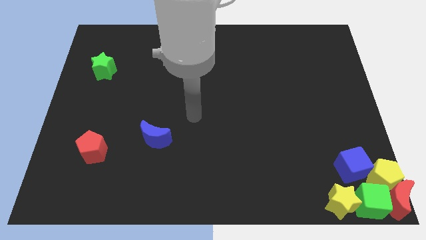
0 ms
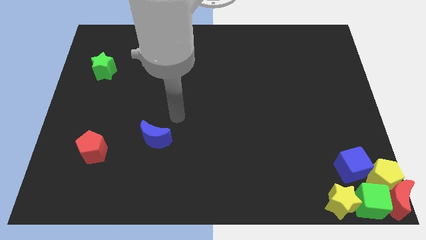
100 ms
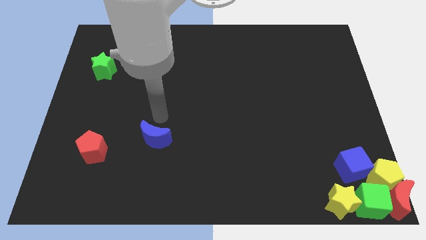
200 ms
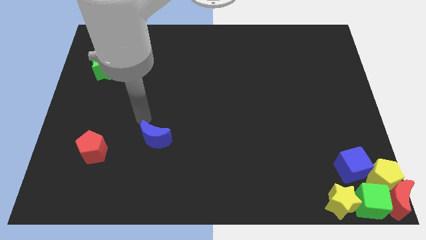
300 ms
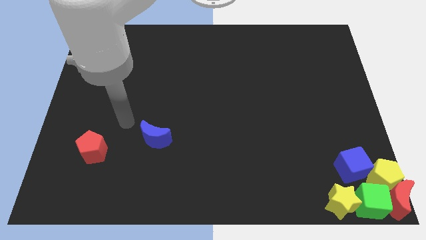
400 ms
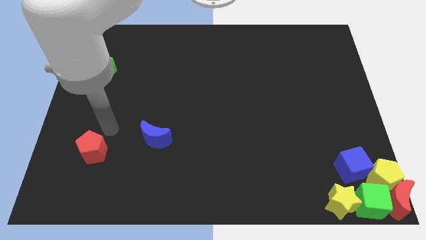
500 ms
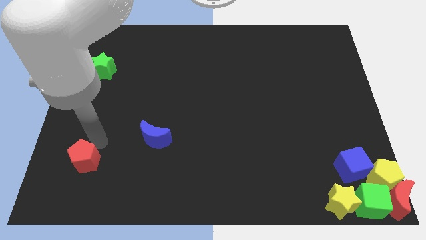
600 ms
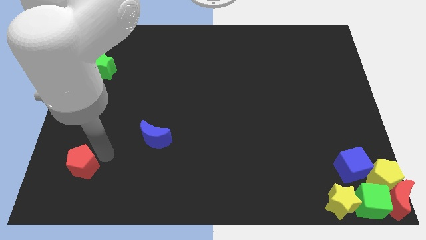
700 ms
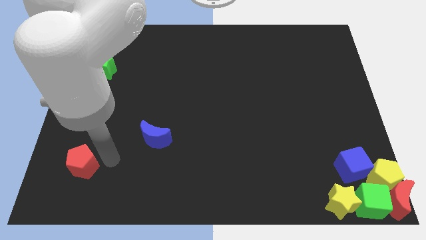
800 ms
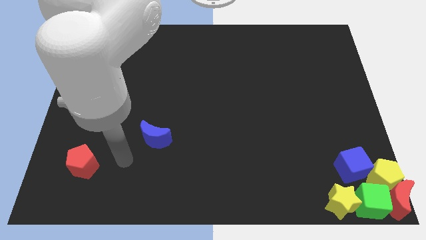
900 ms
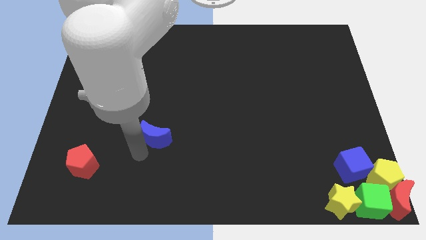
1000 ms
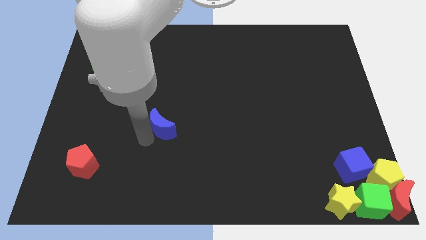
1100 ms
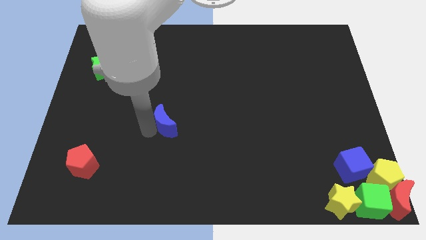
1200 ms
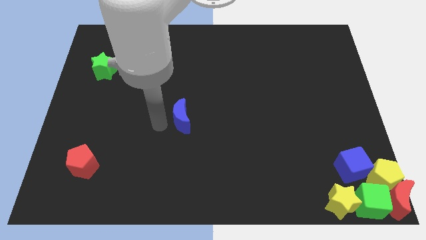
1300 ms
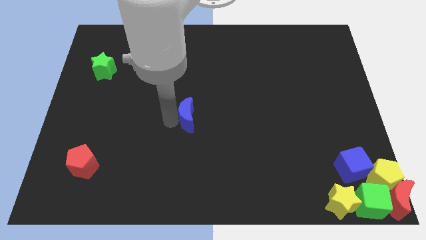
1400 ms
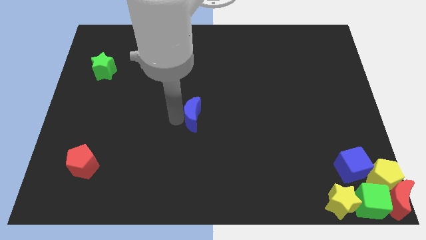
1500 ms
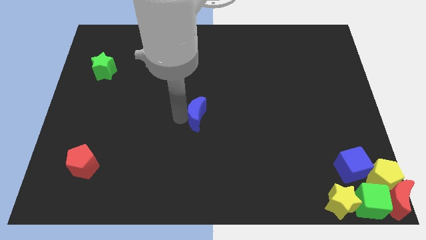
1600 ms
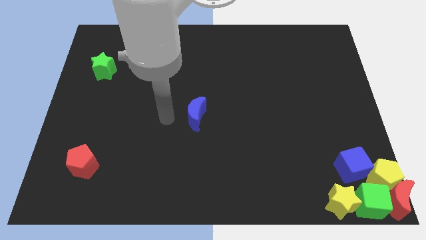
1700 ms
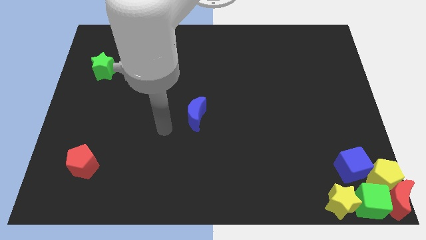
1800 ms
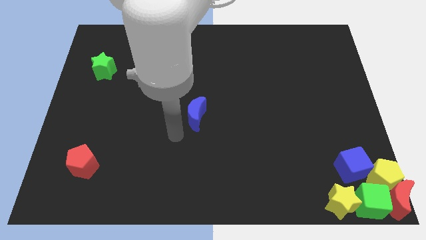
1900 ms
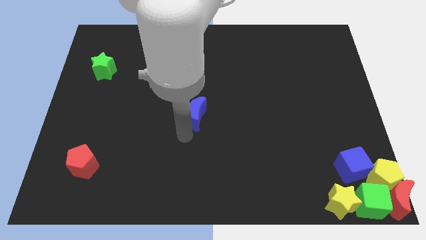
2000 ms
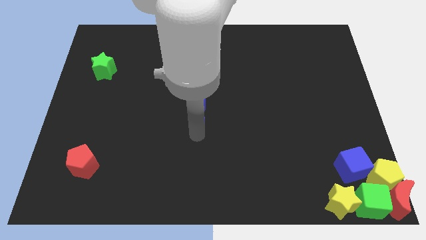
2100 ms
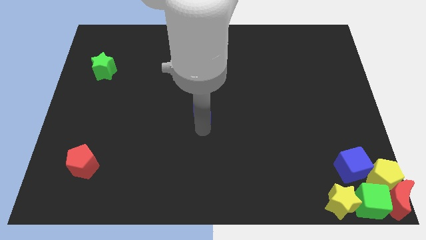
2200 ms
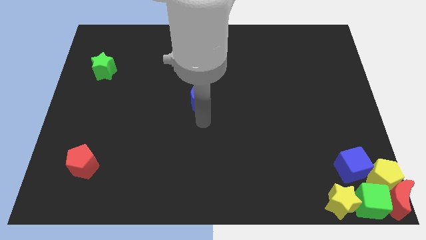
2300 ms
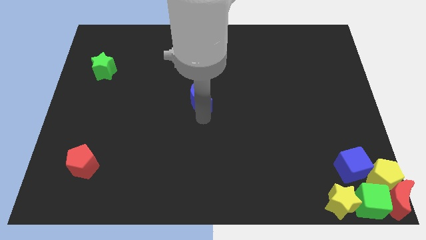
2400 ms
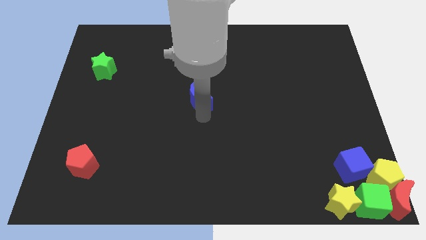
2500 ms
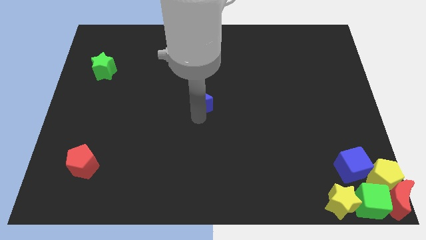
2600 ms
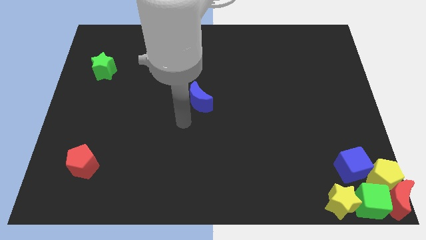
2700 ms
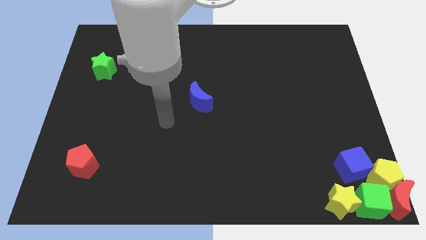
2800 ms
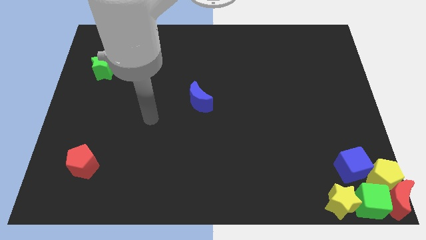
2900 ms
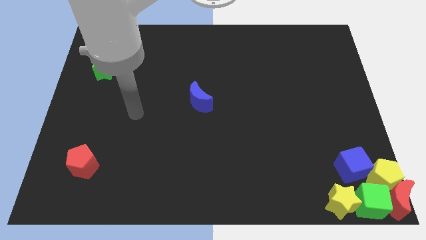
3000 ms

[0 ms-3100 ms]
push the blue moon to the center of board

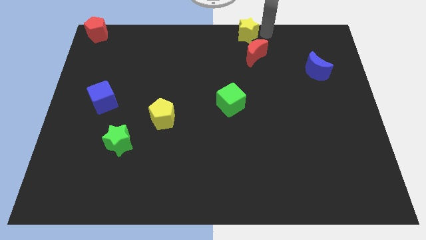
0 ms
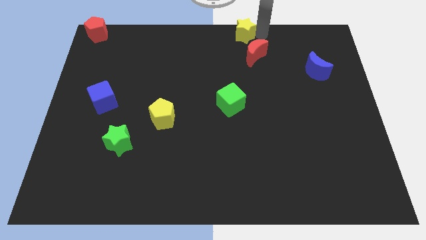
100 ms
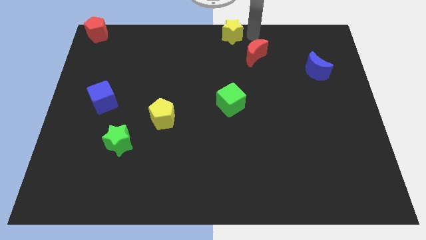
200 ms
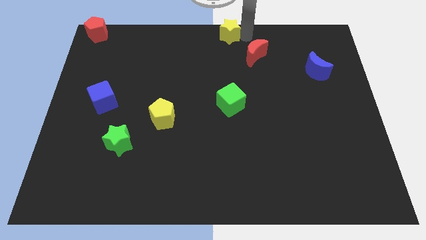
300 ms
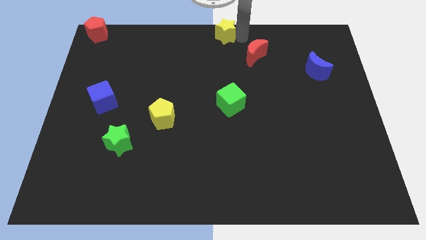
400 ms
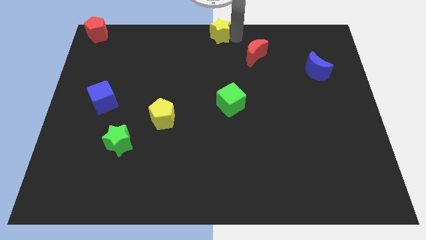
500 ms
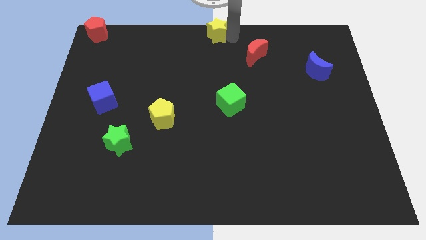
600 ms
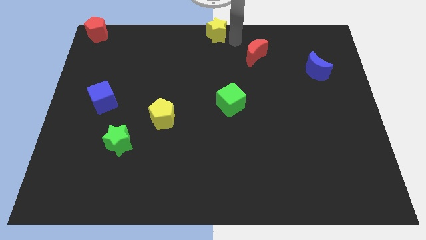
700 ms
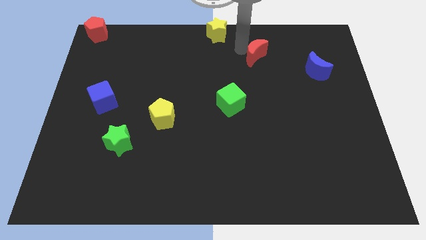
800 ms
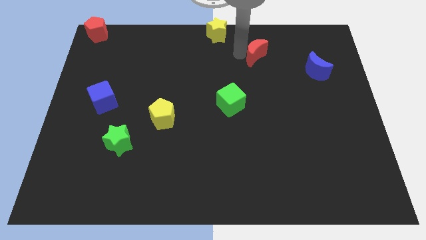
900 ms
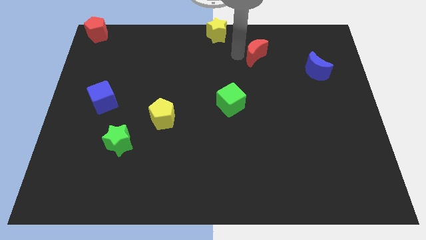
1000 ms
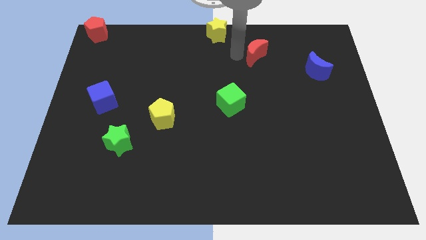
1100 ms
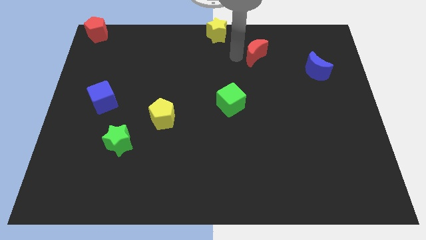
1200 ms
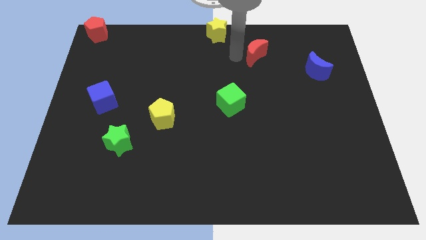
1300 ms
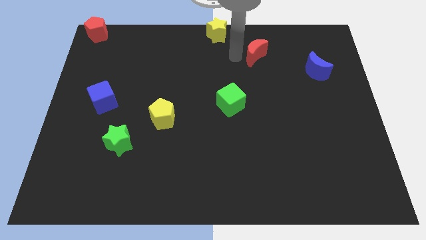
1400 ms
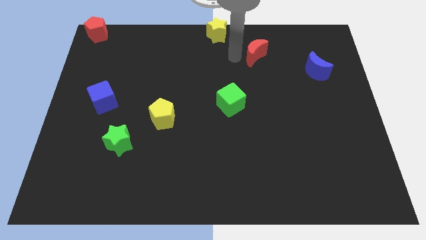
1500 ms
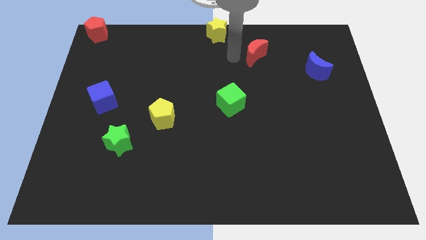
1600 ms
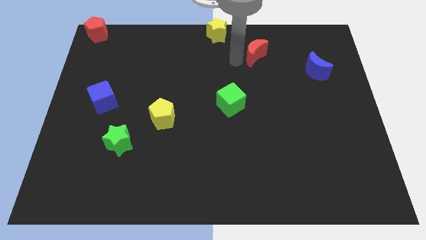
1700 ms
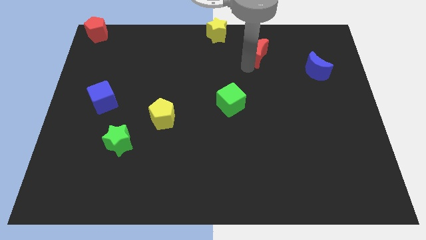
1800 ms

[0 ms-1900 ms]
drag the yellow pentagon to the top center

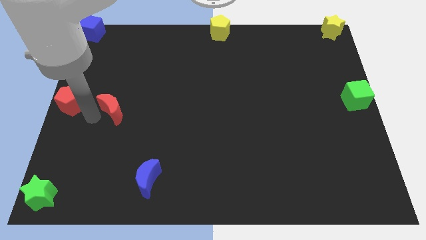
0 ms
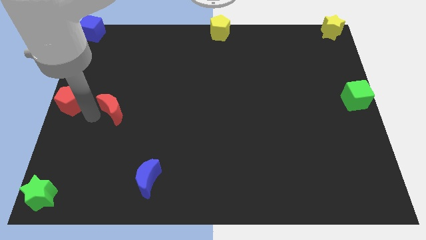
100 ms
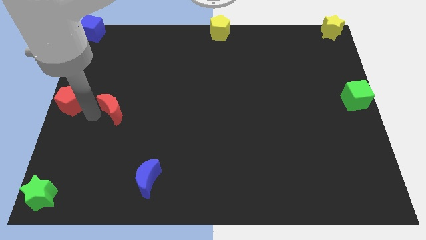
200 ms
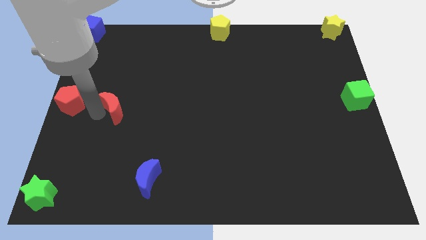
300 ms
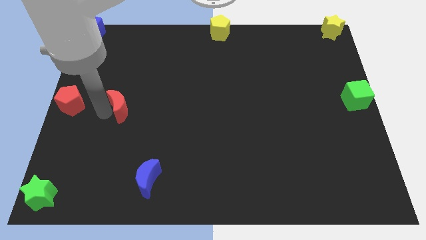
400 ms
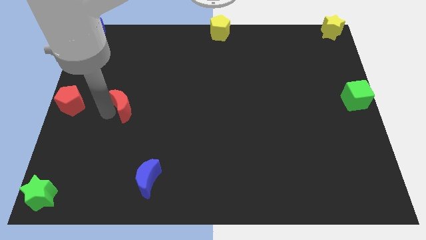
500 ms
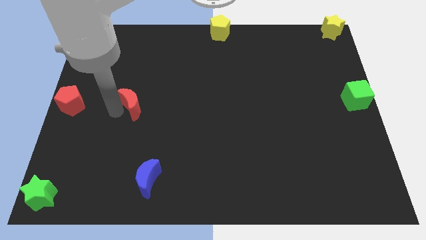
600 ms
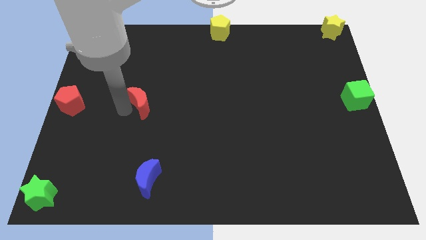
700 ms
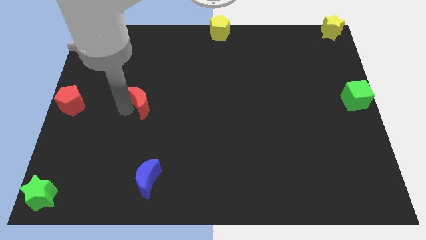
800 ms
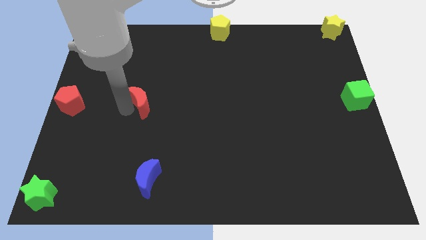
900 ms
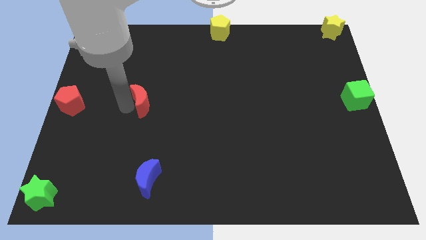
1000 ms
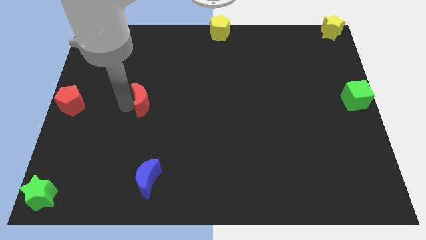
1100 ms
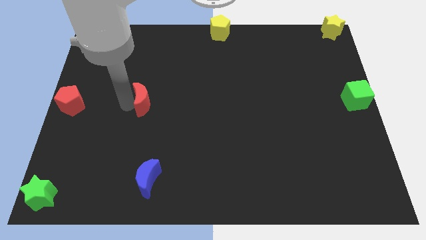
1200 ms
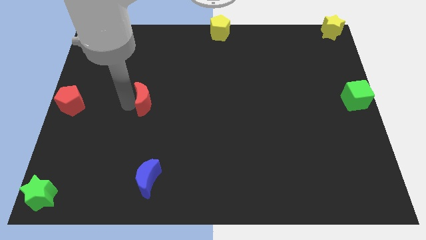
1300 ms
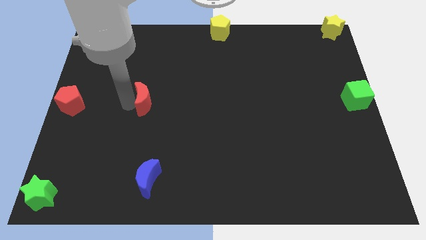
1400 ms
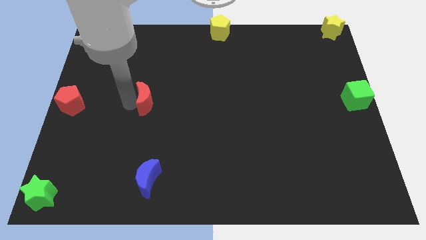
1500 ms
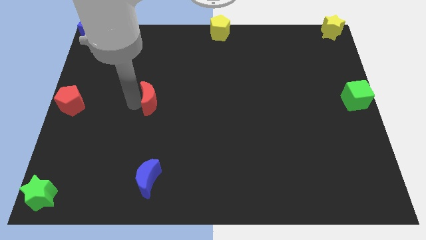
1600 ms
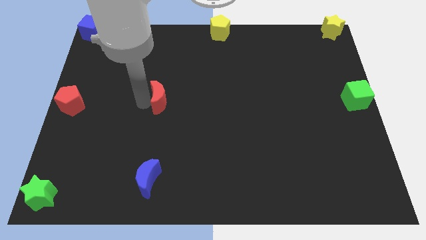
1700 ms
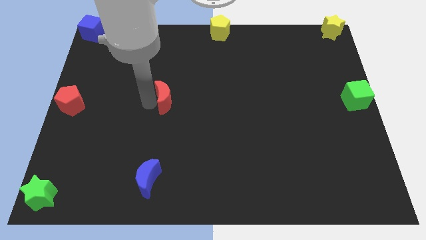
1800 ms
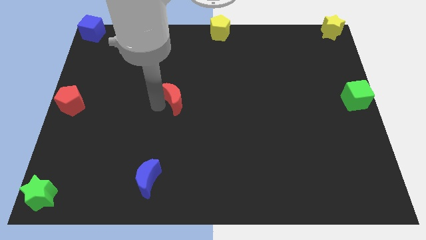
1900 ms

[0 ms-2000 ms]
move the red crescent away from the righ side of the red pentagon

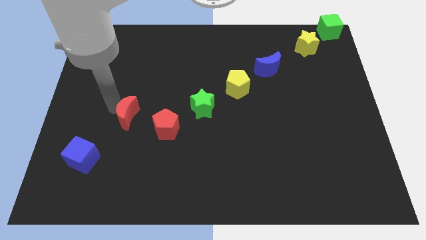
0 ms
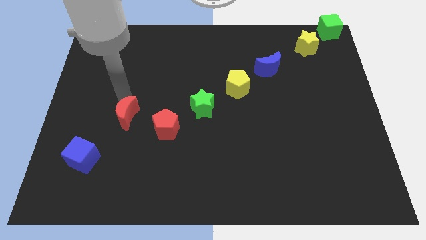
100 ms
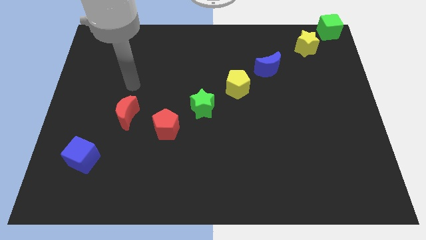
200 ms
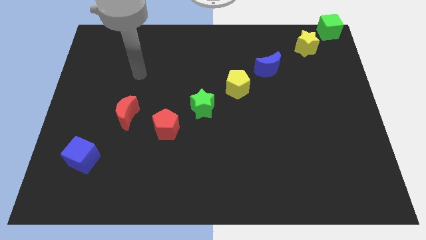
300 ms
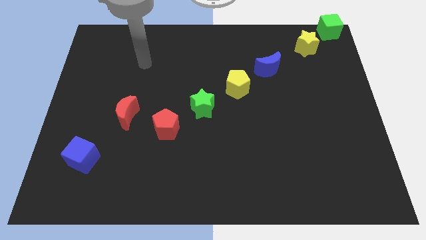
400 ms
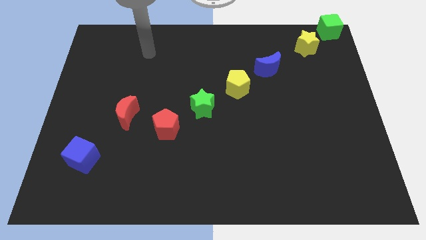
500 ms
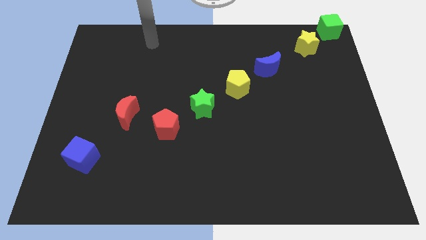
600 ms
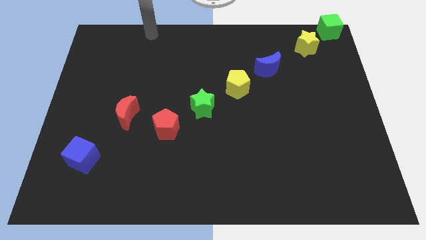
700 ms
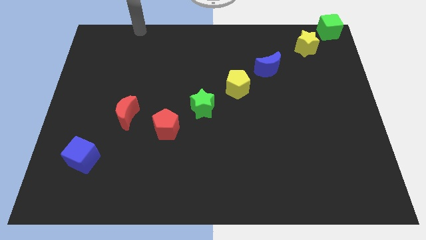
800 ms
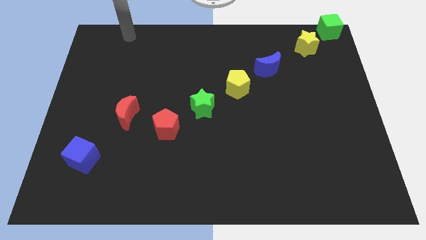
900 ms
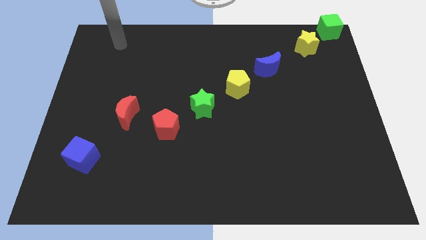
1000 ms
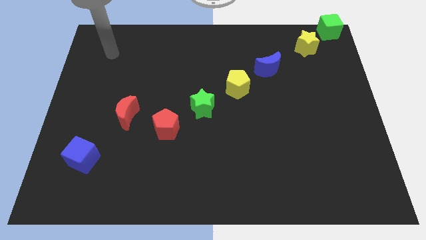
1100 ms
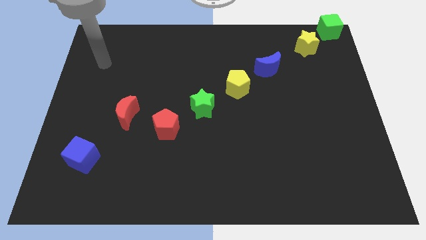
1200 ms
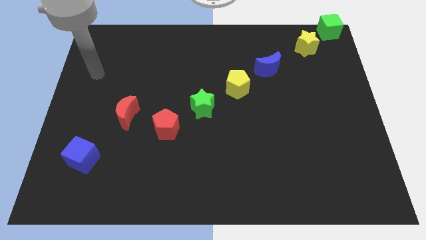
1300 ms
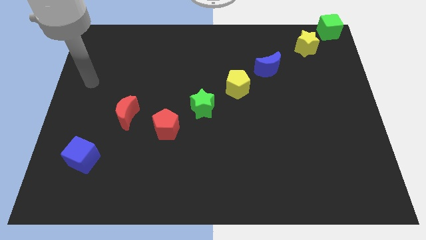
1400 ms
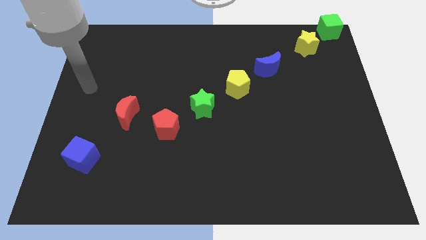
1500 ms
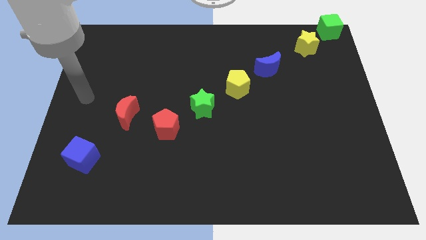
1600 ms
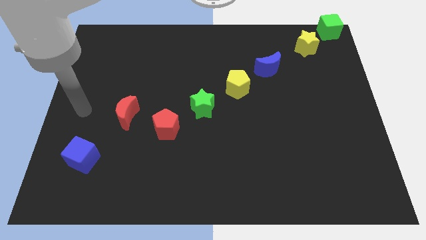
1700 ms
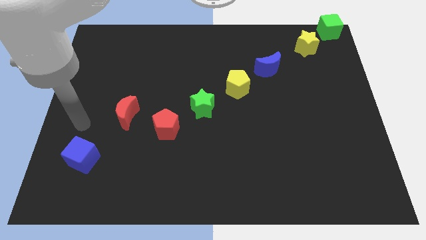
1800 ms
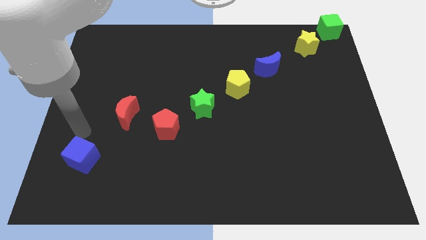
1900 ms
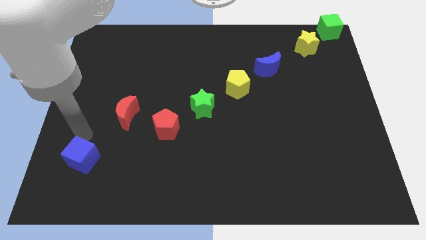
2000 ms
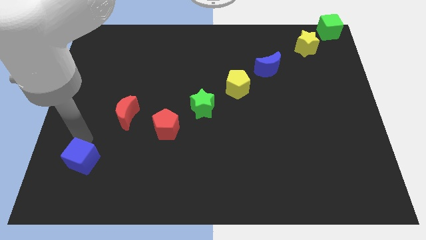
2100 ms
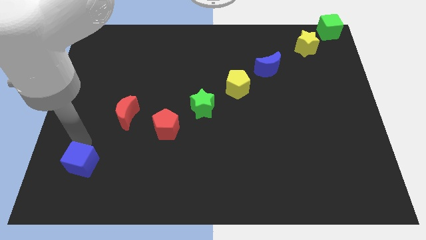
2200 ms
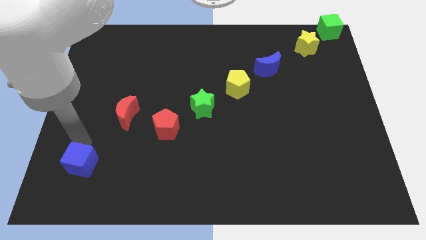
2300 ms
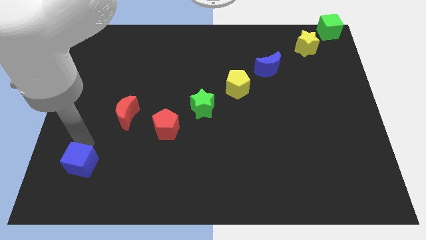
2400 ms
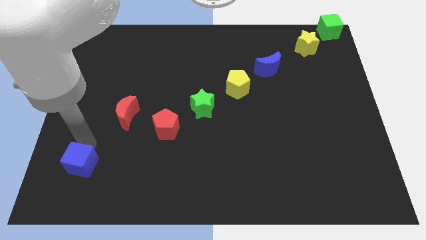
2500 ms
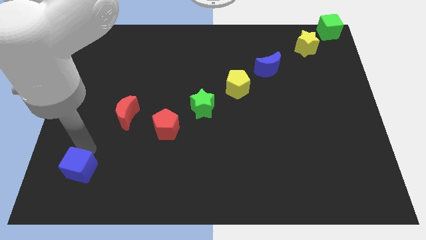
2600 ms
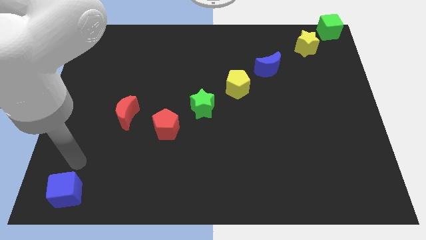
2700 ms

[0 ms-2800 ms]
move the blue cube slightly to the bottom left of the board
